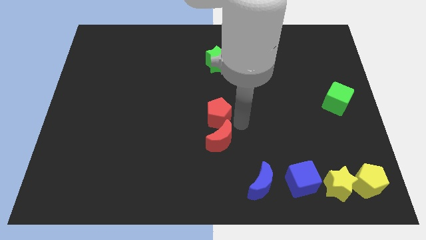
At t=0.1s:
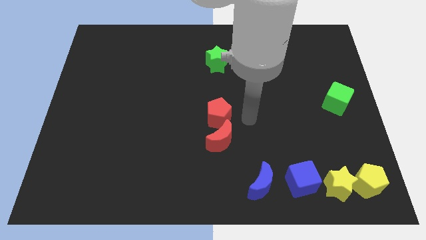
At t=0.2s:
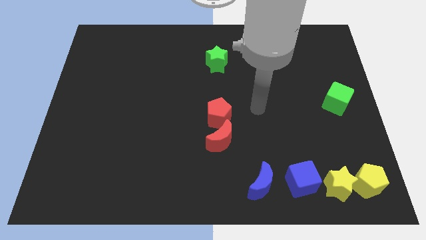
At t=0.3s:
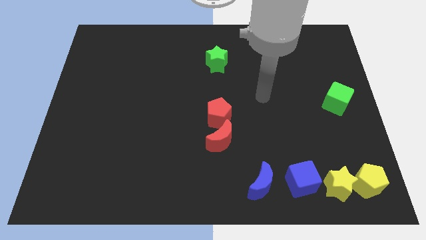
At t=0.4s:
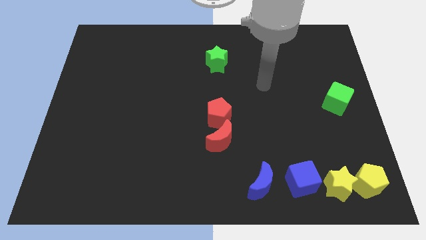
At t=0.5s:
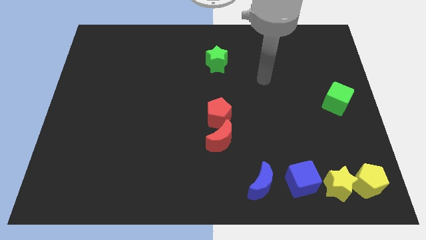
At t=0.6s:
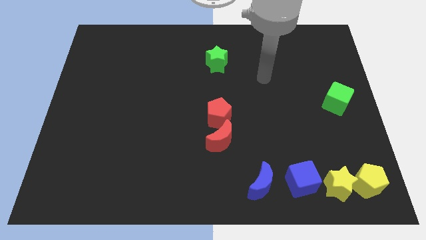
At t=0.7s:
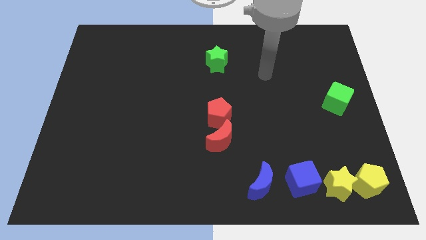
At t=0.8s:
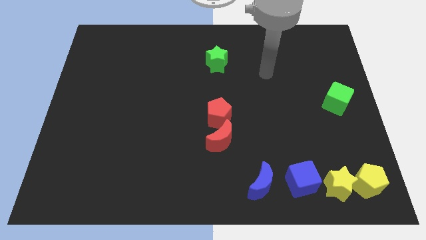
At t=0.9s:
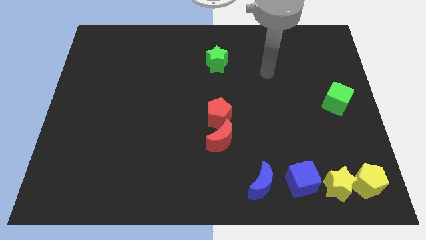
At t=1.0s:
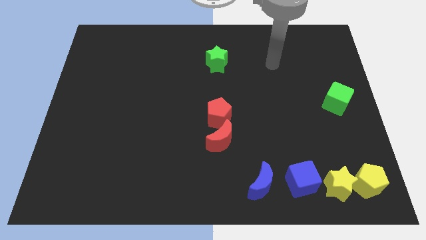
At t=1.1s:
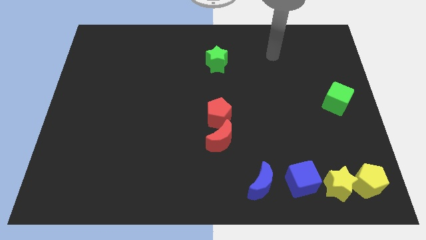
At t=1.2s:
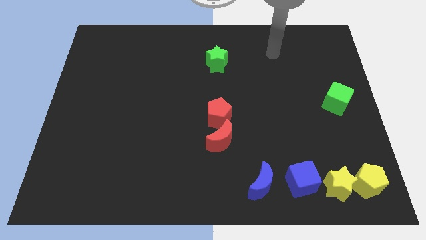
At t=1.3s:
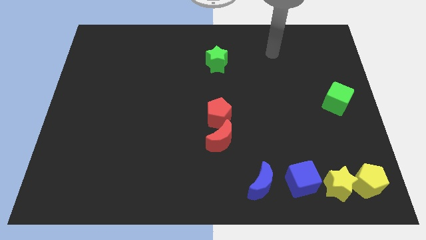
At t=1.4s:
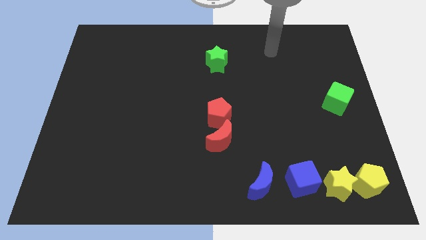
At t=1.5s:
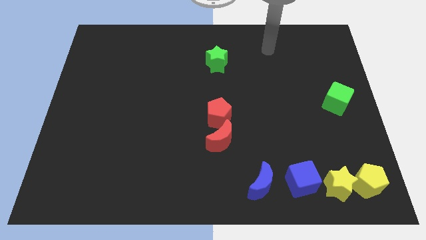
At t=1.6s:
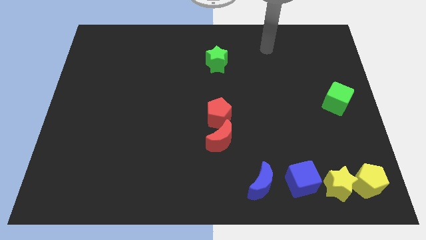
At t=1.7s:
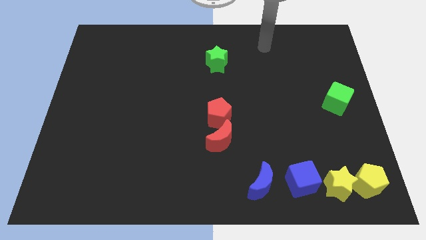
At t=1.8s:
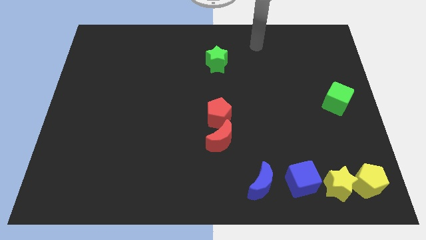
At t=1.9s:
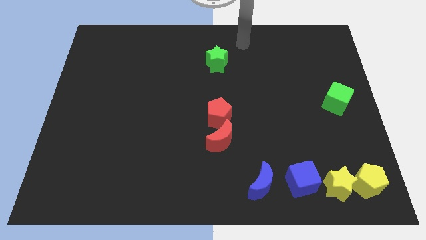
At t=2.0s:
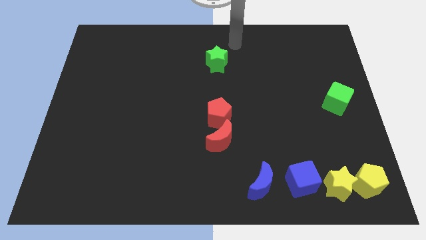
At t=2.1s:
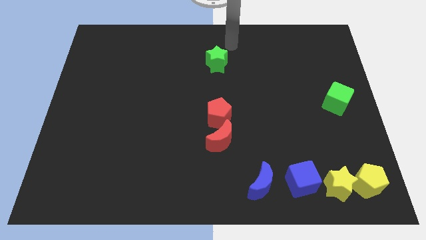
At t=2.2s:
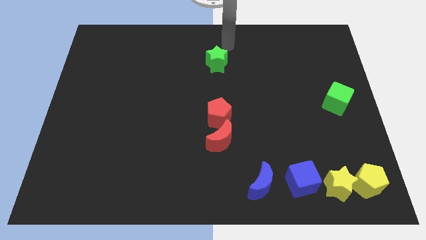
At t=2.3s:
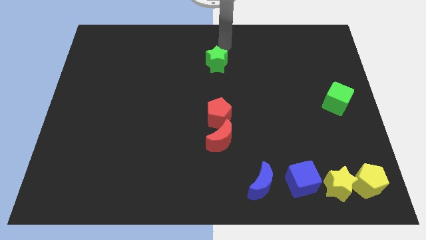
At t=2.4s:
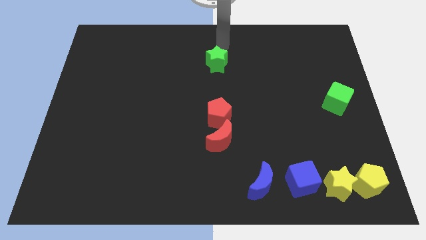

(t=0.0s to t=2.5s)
point your arm above the green star

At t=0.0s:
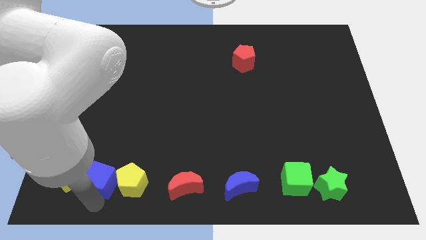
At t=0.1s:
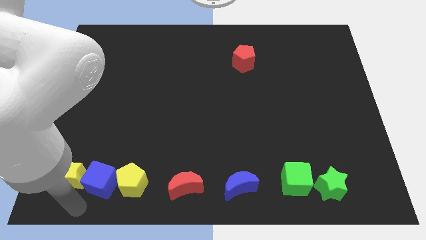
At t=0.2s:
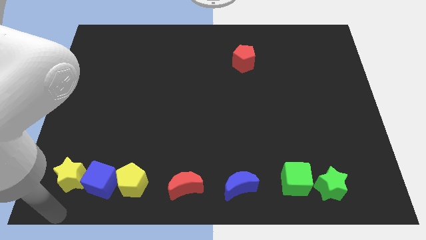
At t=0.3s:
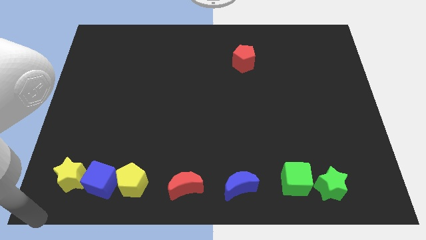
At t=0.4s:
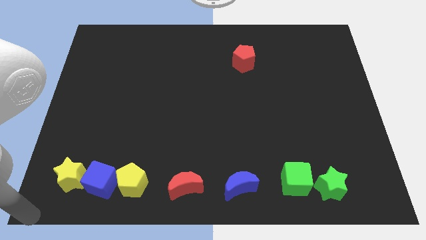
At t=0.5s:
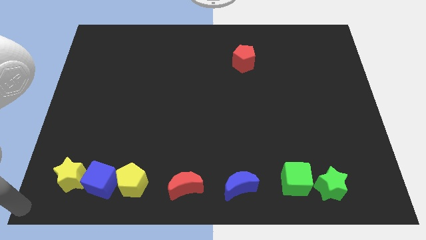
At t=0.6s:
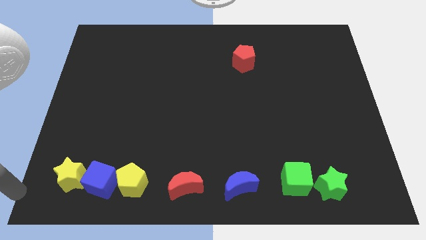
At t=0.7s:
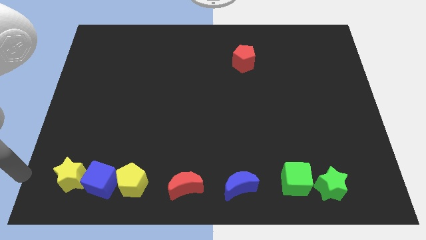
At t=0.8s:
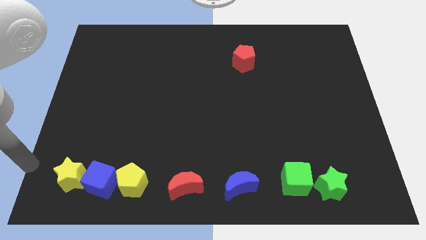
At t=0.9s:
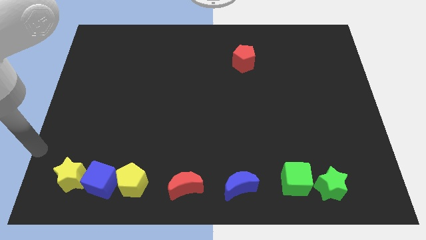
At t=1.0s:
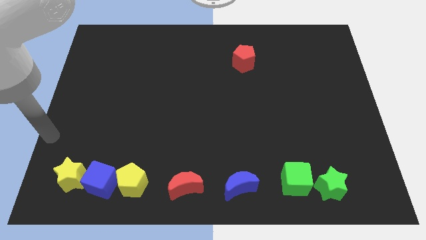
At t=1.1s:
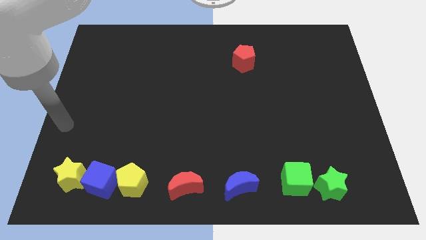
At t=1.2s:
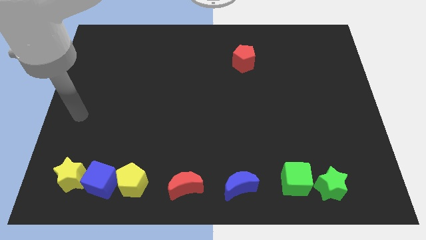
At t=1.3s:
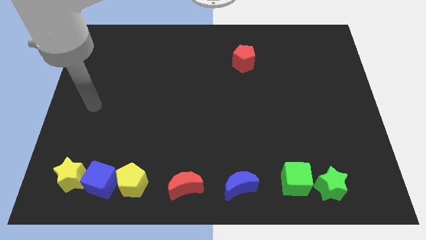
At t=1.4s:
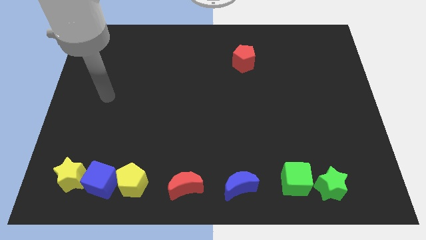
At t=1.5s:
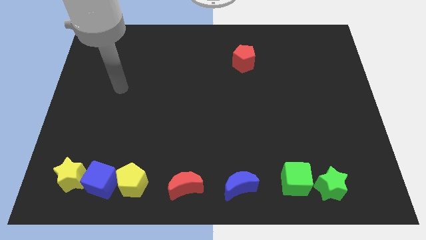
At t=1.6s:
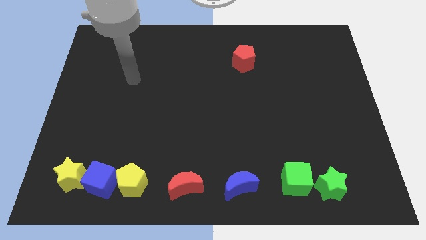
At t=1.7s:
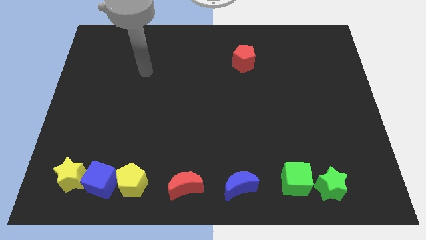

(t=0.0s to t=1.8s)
move your hand away from the blue cube

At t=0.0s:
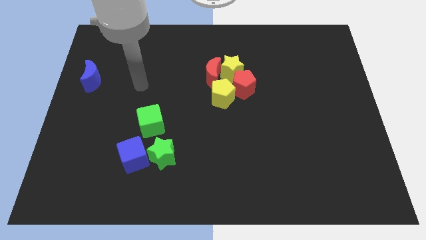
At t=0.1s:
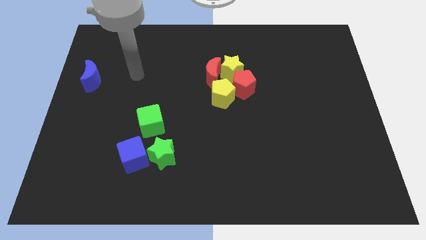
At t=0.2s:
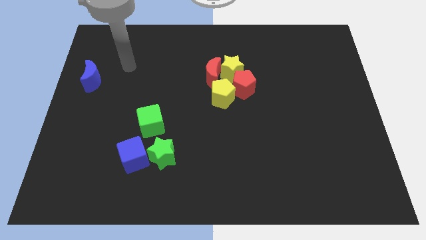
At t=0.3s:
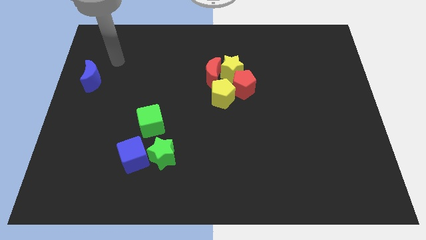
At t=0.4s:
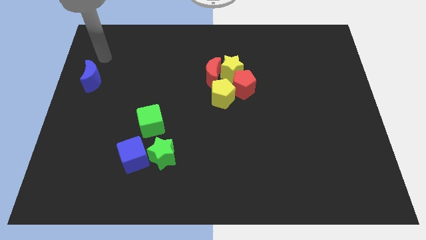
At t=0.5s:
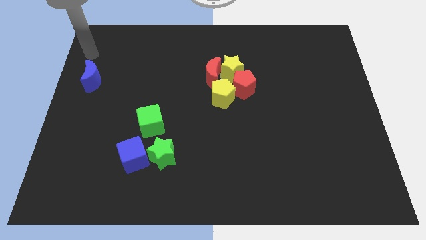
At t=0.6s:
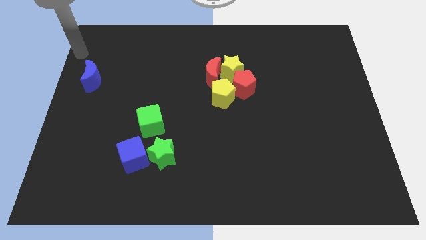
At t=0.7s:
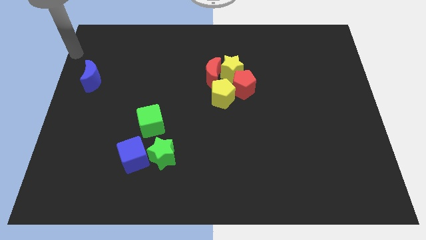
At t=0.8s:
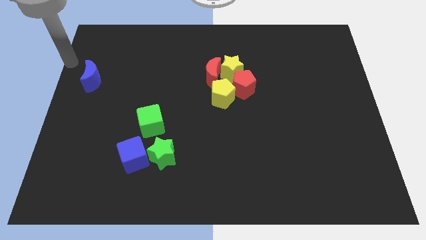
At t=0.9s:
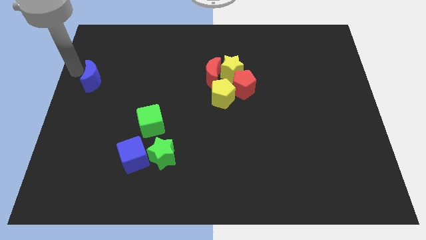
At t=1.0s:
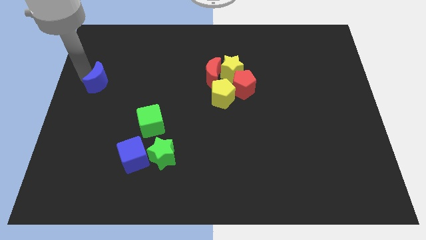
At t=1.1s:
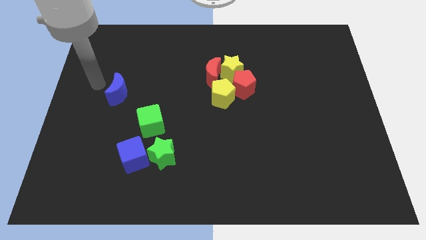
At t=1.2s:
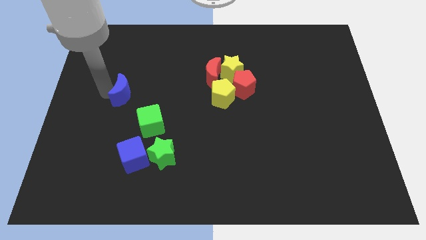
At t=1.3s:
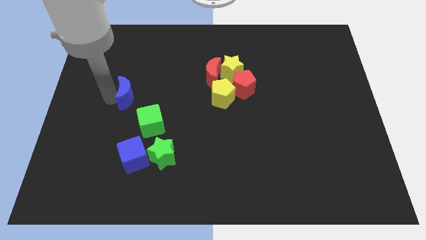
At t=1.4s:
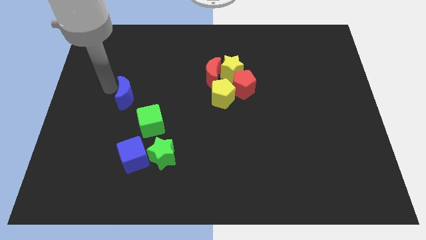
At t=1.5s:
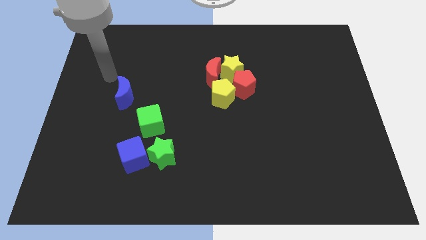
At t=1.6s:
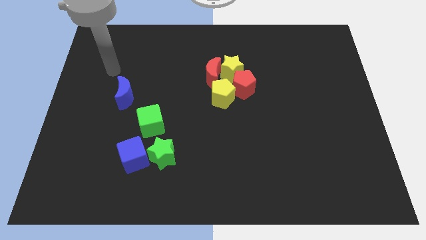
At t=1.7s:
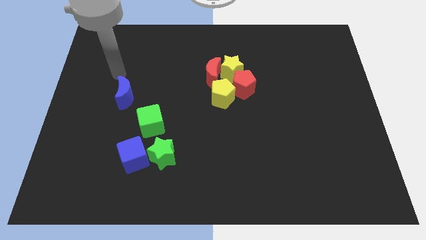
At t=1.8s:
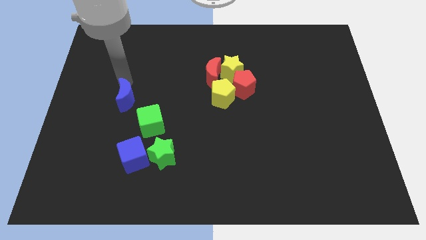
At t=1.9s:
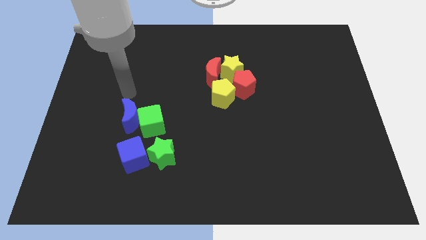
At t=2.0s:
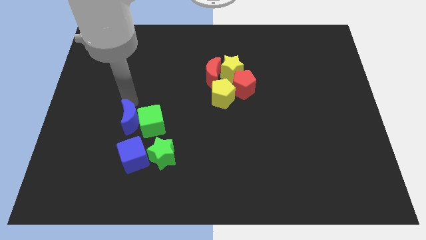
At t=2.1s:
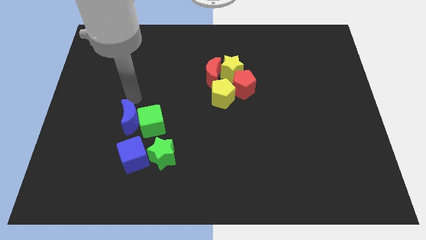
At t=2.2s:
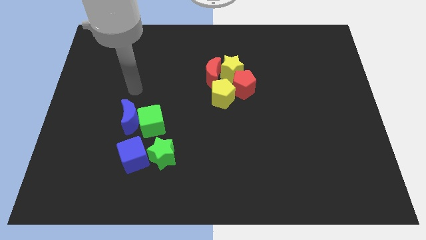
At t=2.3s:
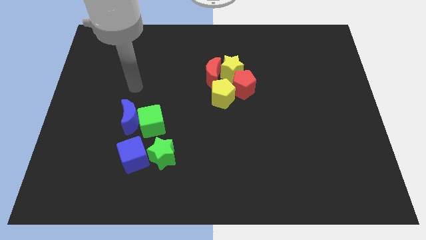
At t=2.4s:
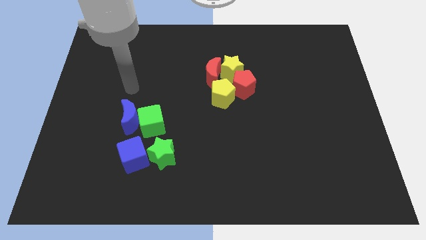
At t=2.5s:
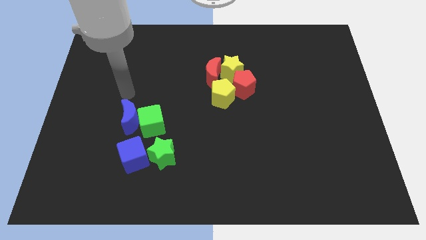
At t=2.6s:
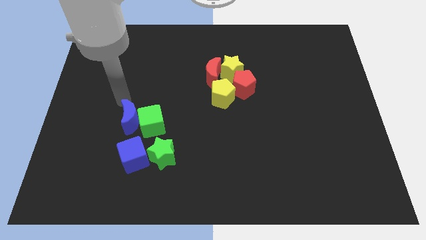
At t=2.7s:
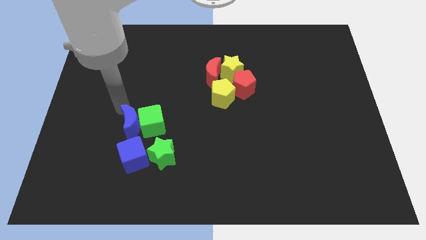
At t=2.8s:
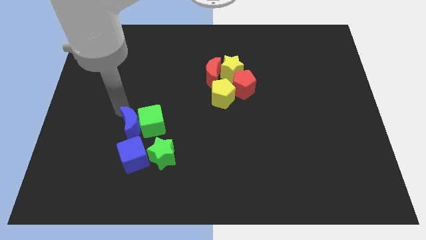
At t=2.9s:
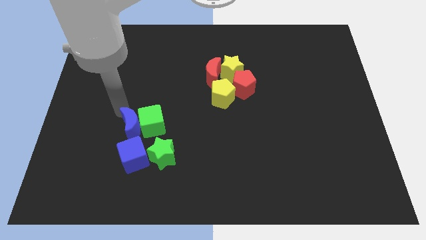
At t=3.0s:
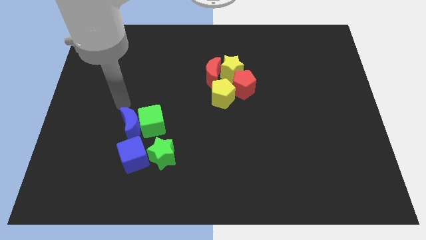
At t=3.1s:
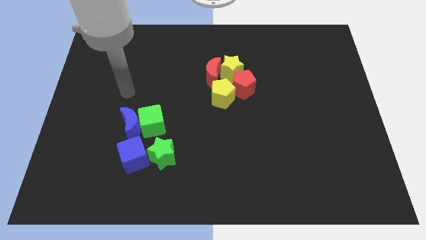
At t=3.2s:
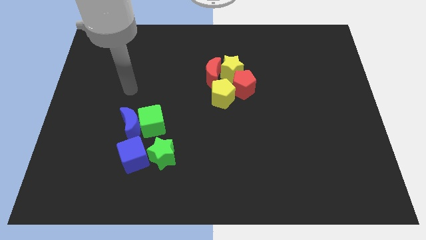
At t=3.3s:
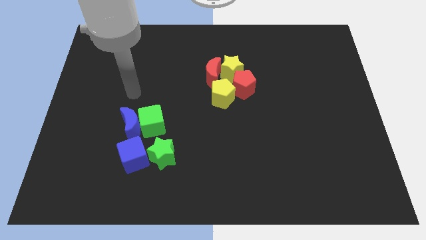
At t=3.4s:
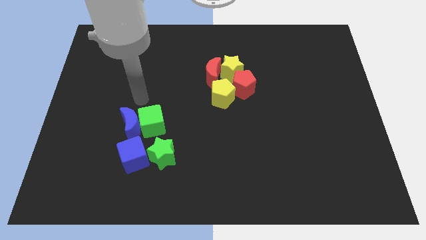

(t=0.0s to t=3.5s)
push the blue moon to the left side of the green cube

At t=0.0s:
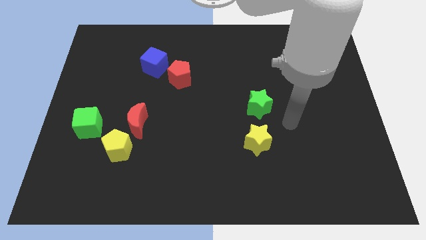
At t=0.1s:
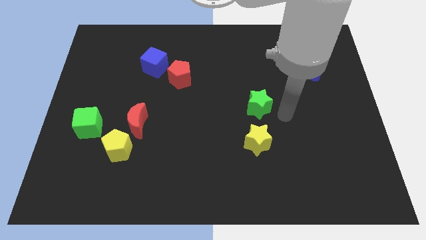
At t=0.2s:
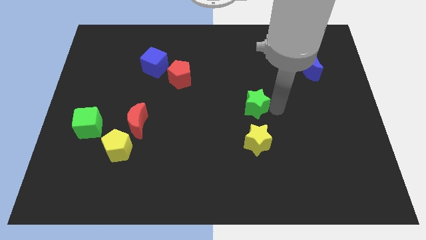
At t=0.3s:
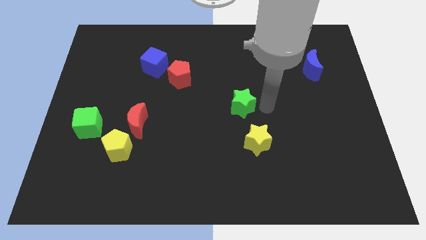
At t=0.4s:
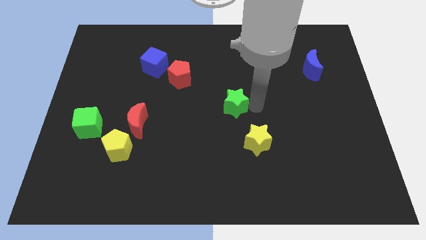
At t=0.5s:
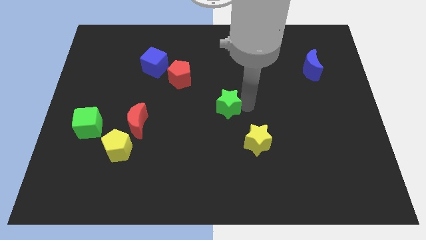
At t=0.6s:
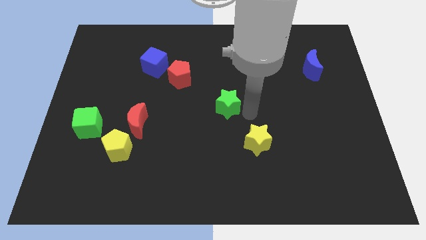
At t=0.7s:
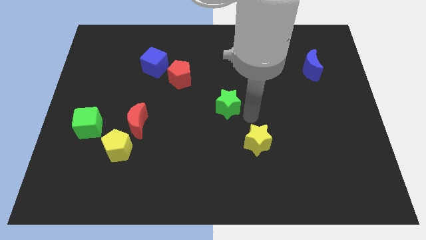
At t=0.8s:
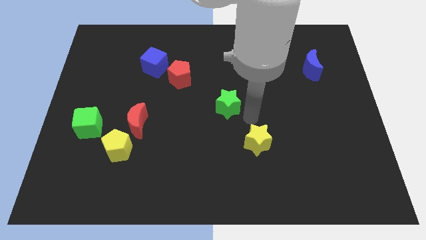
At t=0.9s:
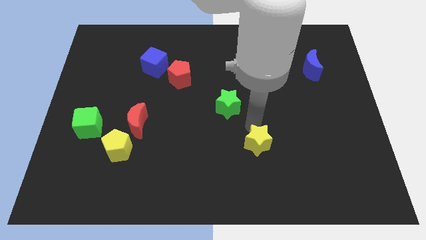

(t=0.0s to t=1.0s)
push green star slightly towards left
